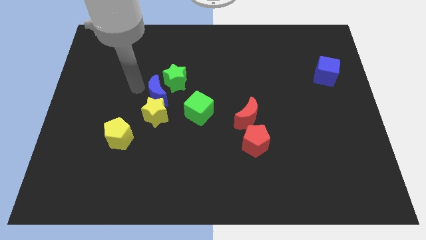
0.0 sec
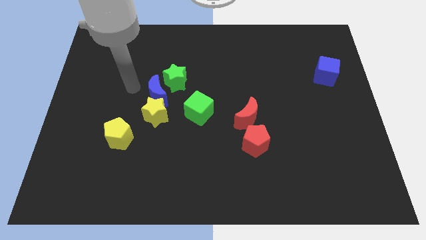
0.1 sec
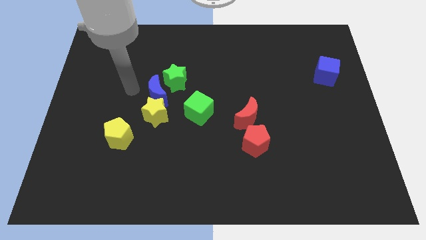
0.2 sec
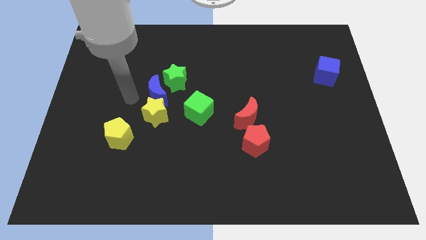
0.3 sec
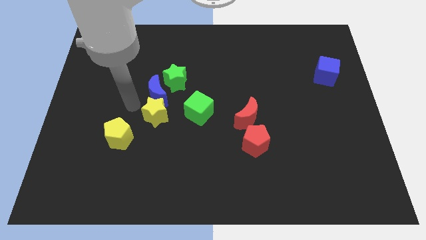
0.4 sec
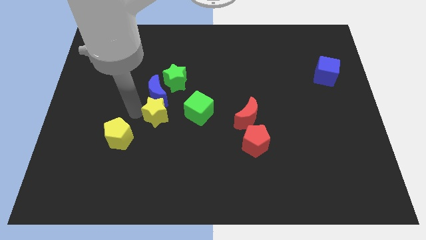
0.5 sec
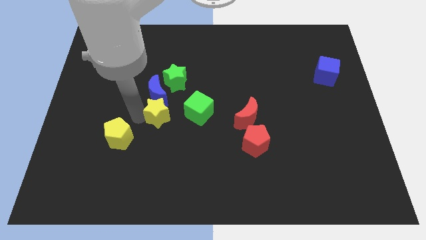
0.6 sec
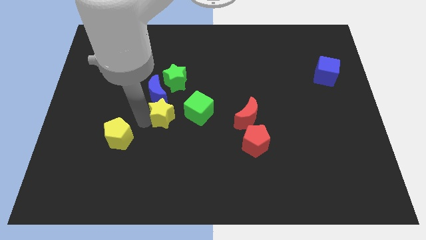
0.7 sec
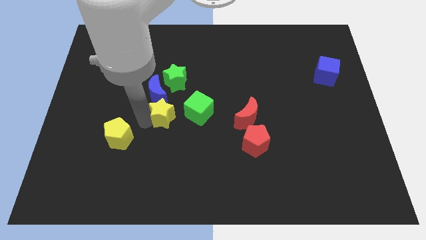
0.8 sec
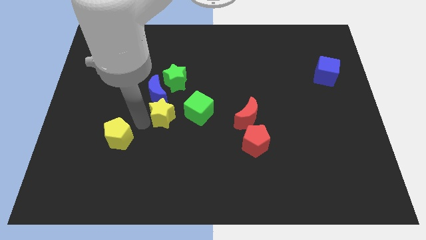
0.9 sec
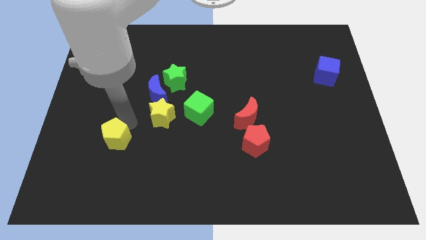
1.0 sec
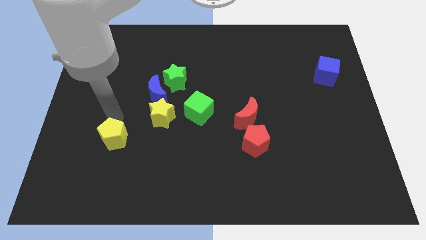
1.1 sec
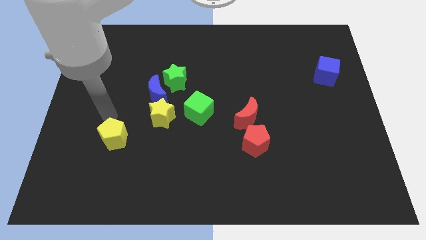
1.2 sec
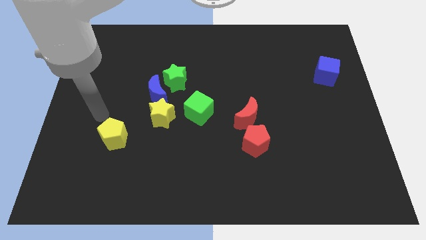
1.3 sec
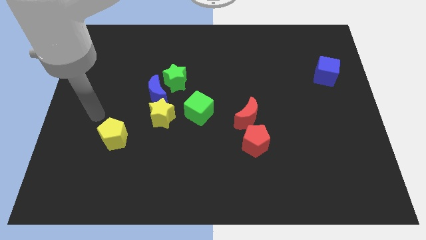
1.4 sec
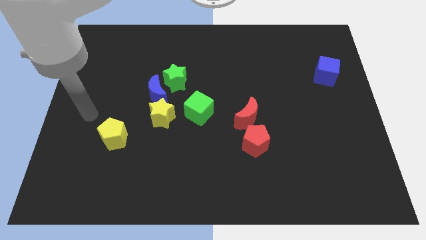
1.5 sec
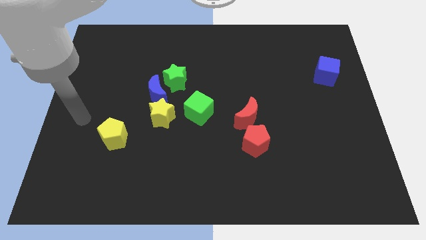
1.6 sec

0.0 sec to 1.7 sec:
push the yellow star towards the center of the board

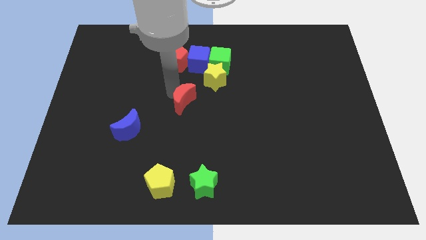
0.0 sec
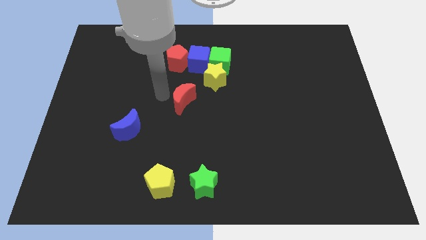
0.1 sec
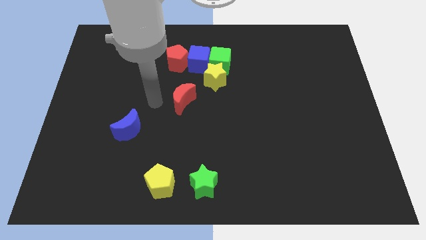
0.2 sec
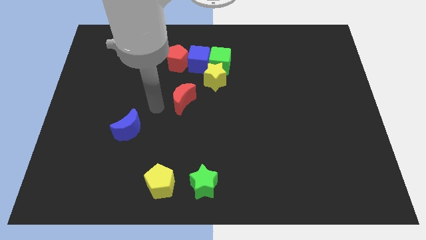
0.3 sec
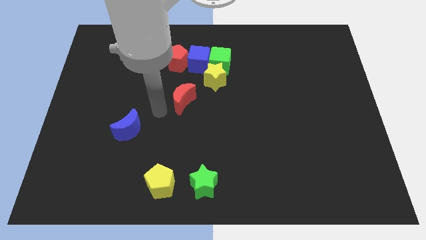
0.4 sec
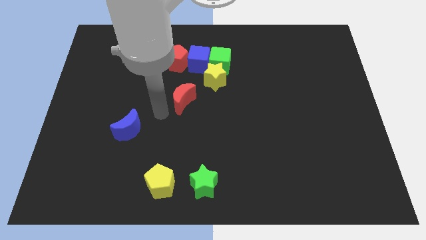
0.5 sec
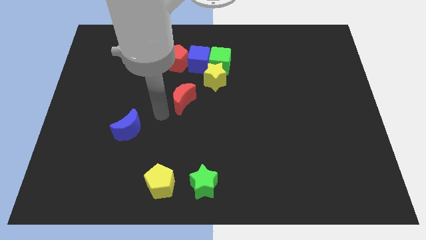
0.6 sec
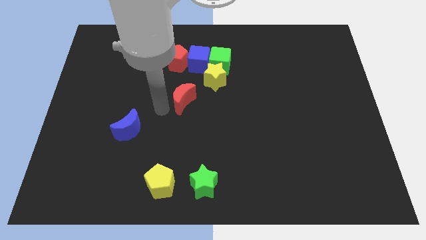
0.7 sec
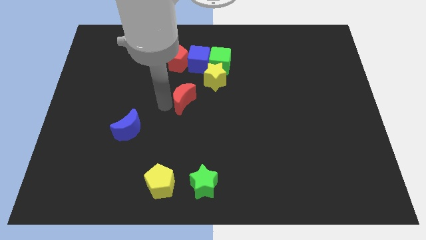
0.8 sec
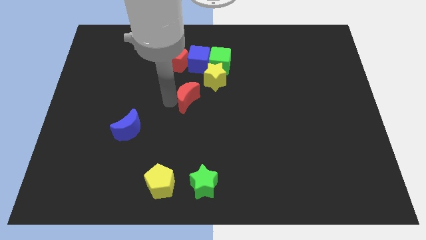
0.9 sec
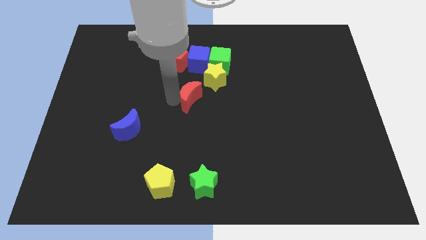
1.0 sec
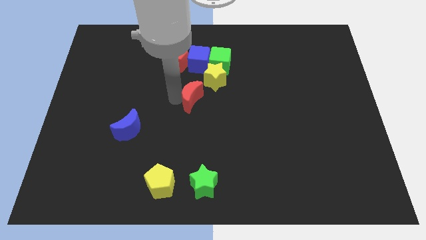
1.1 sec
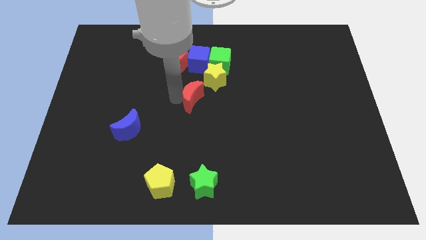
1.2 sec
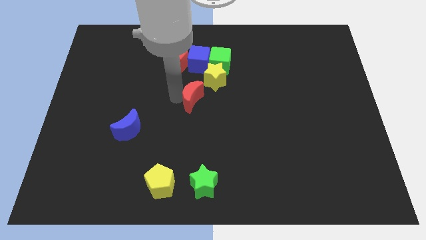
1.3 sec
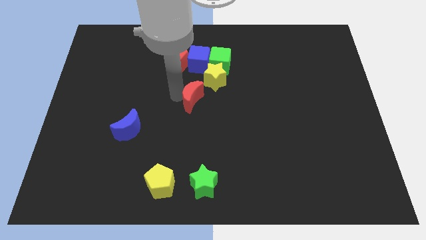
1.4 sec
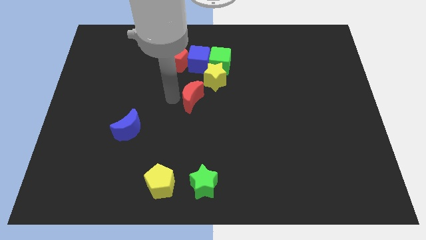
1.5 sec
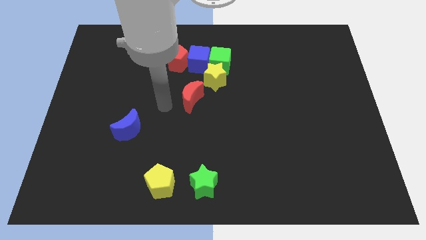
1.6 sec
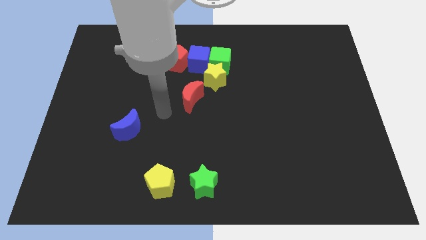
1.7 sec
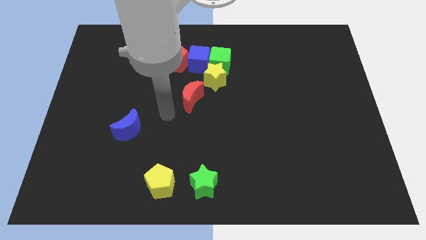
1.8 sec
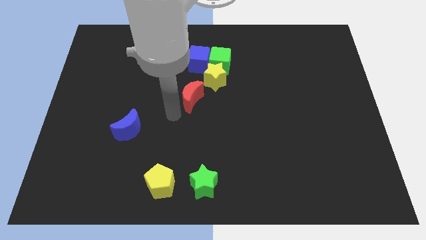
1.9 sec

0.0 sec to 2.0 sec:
push the red moon close to the yellow star

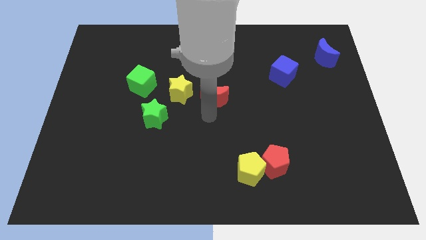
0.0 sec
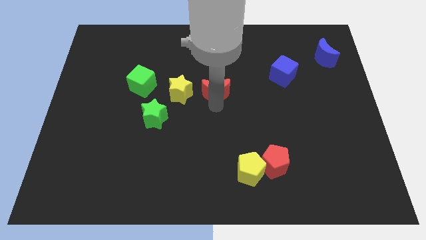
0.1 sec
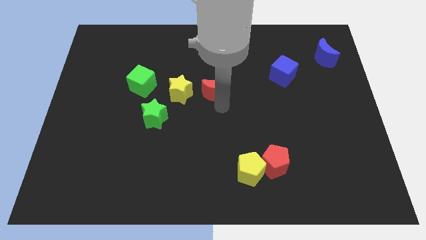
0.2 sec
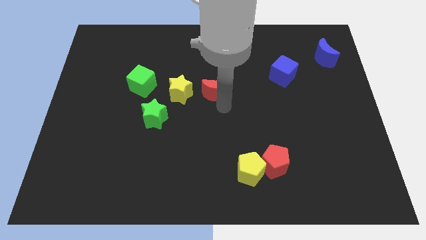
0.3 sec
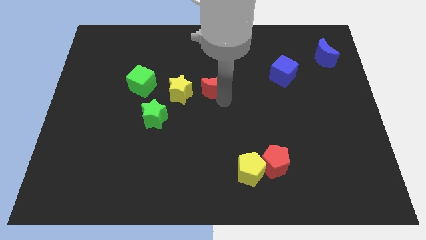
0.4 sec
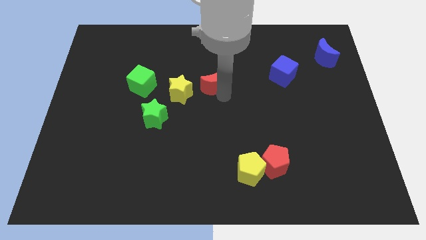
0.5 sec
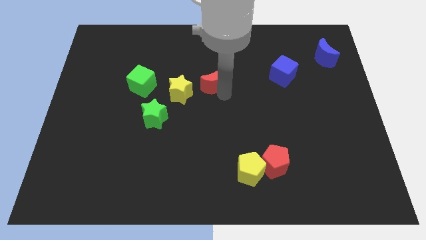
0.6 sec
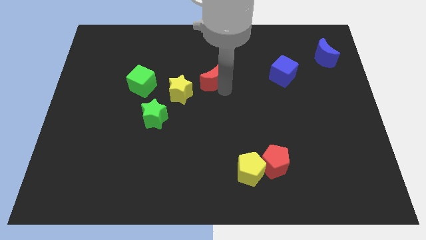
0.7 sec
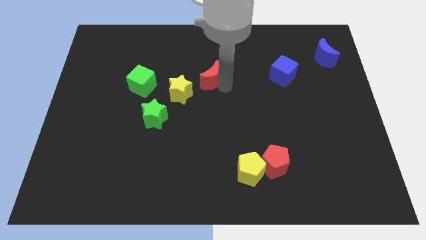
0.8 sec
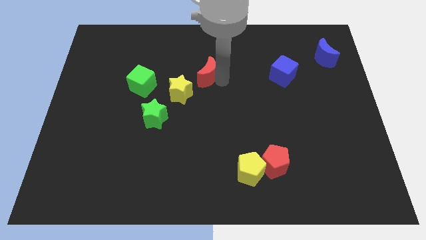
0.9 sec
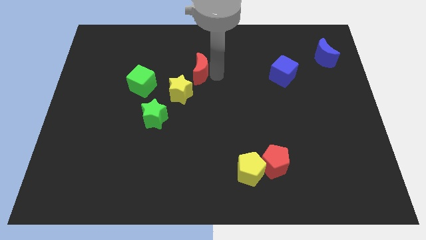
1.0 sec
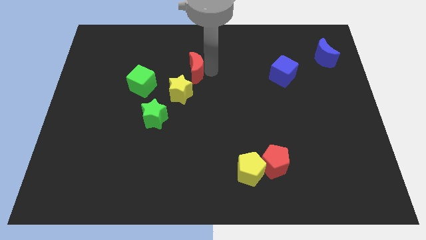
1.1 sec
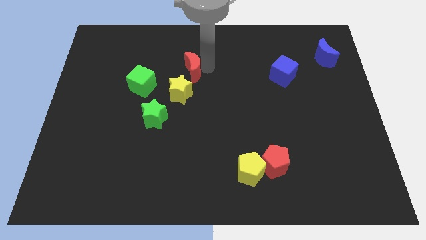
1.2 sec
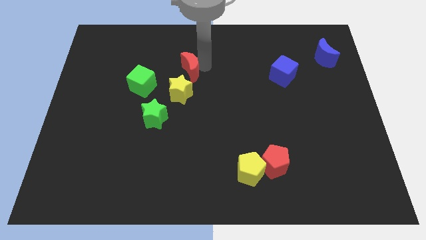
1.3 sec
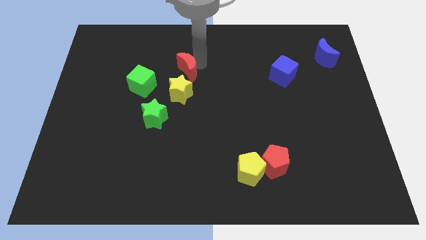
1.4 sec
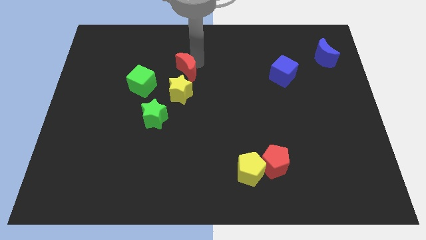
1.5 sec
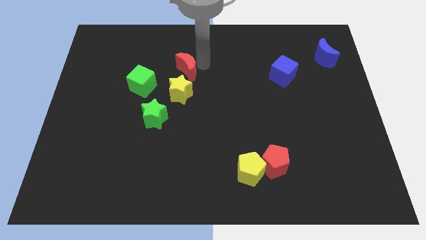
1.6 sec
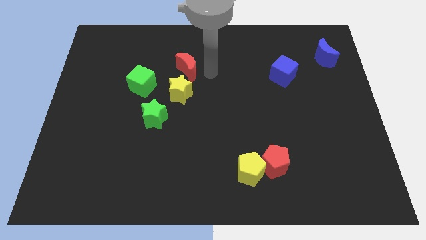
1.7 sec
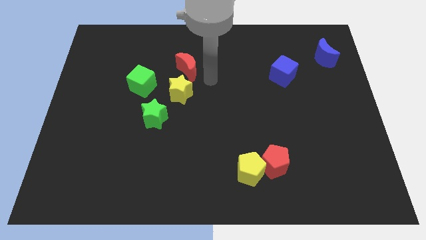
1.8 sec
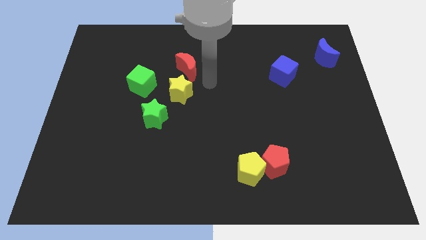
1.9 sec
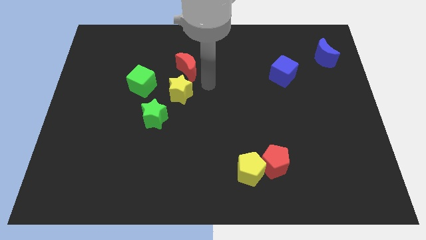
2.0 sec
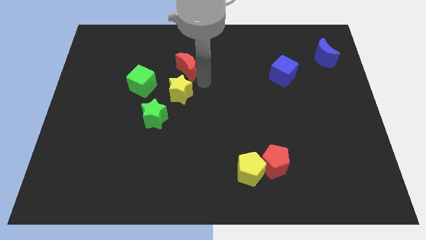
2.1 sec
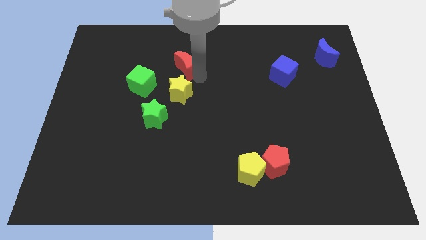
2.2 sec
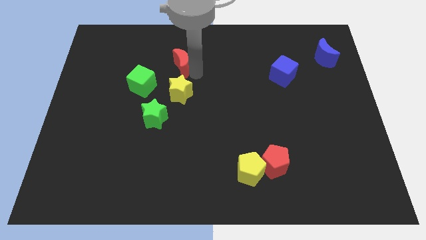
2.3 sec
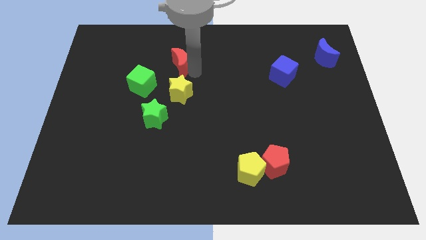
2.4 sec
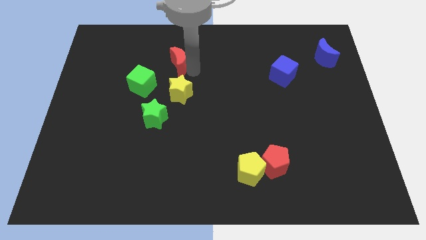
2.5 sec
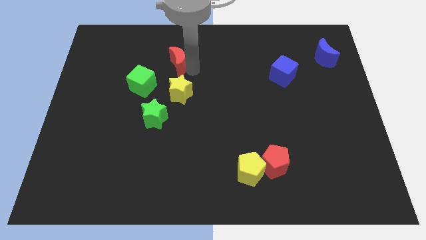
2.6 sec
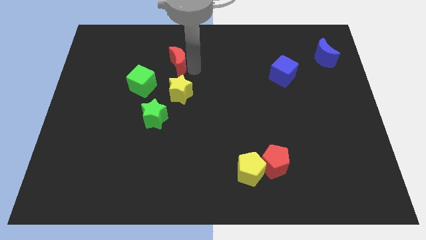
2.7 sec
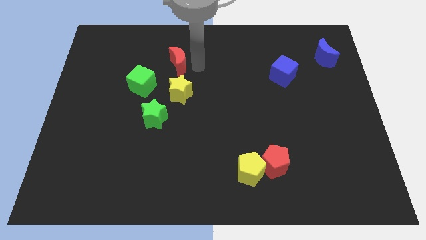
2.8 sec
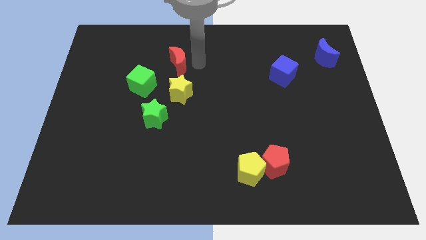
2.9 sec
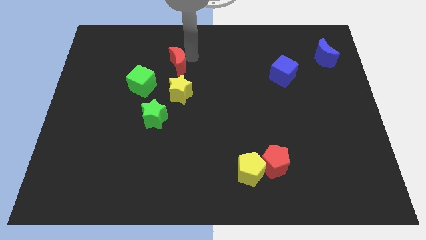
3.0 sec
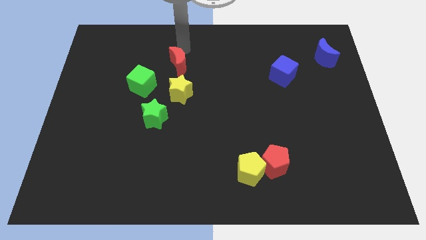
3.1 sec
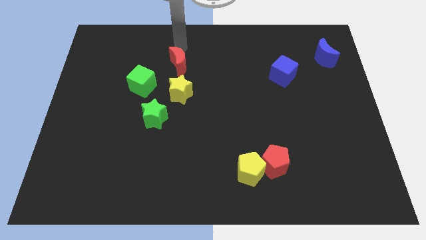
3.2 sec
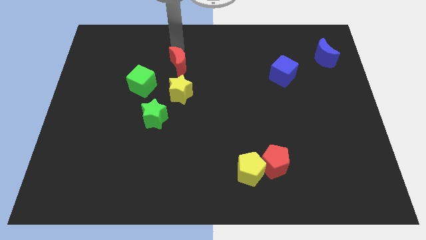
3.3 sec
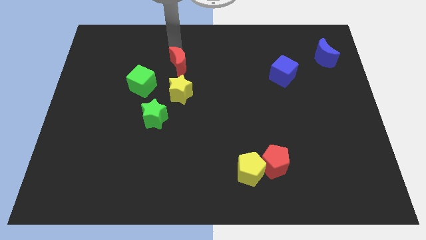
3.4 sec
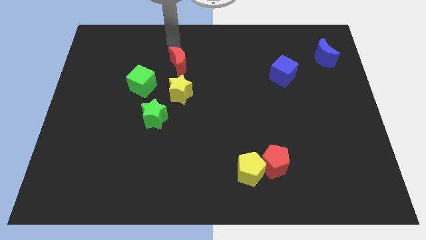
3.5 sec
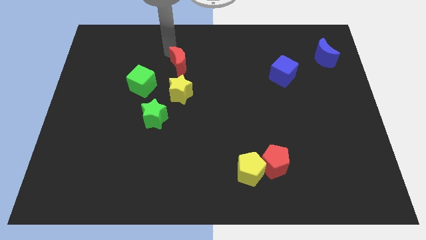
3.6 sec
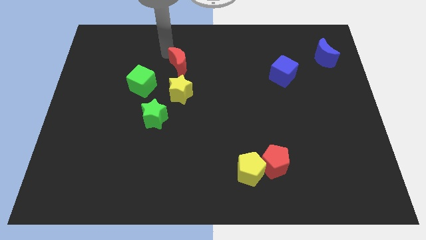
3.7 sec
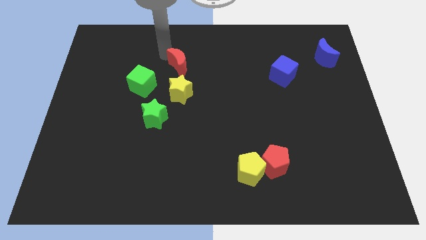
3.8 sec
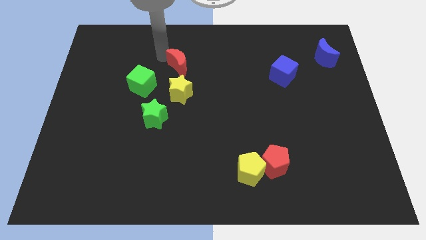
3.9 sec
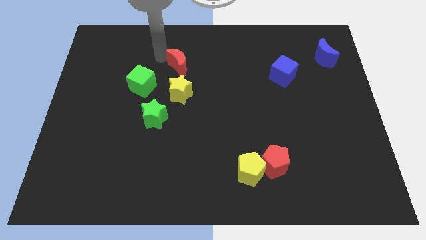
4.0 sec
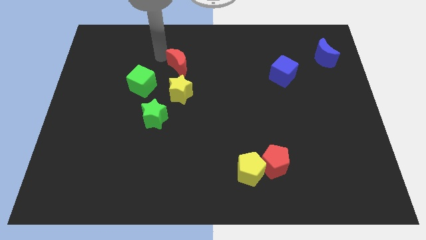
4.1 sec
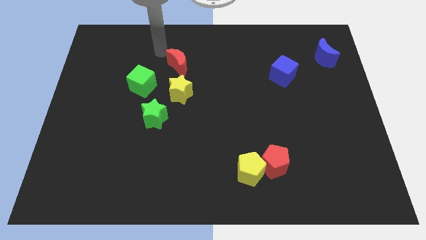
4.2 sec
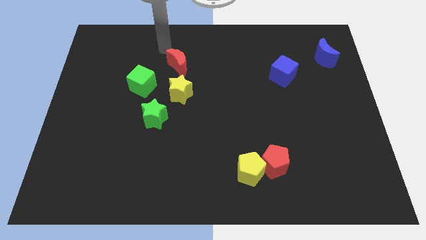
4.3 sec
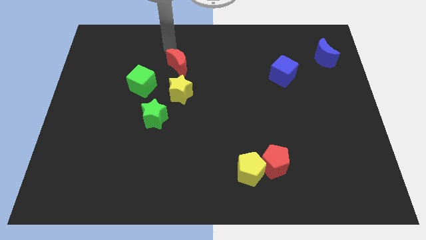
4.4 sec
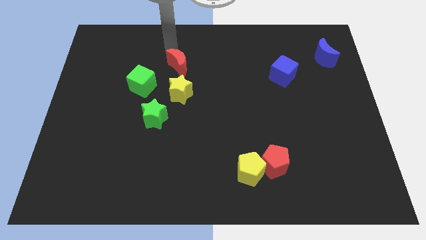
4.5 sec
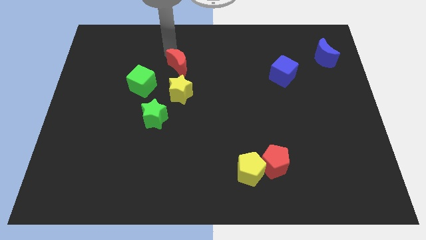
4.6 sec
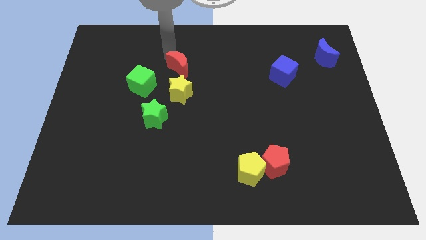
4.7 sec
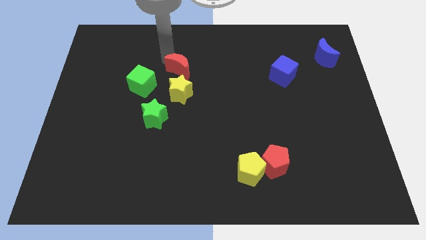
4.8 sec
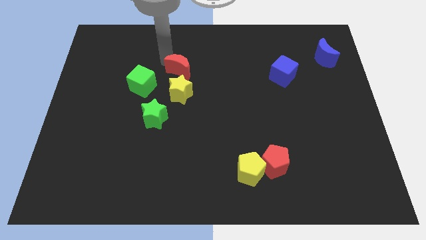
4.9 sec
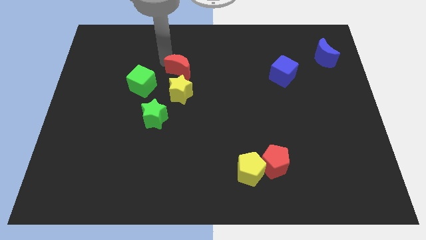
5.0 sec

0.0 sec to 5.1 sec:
push red moon towards yellow star

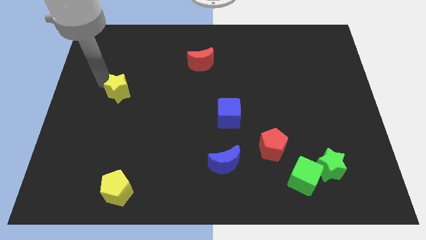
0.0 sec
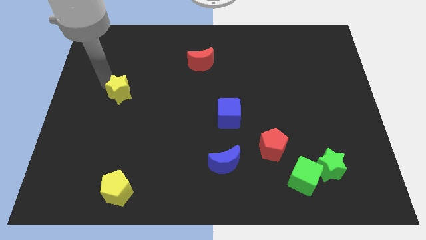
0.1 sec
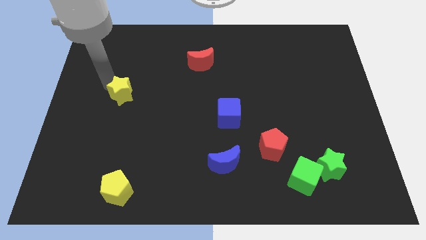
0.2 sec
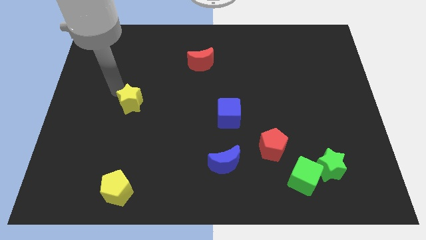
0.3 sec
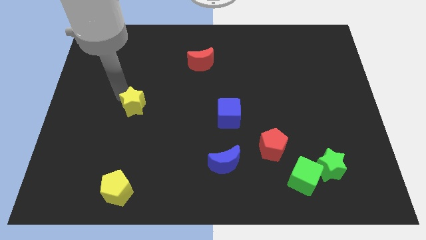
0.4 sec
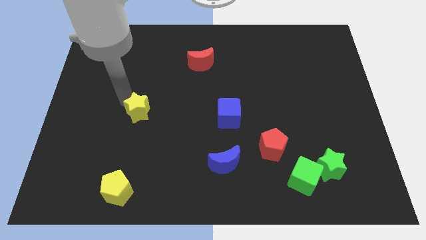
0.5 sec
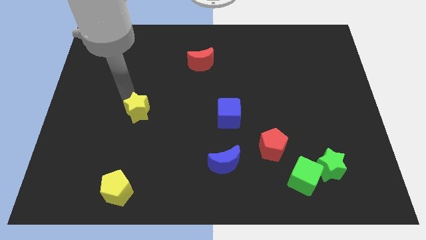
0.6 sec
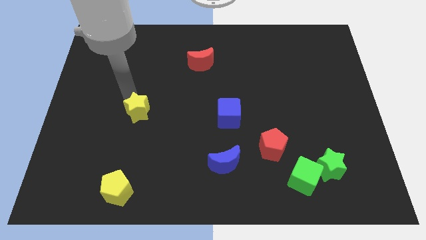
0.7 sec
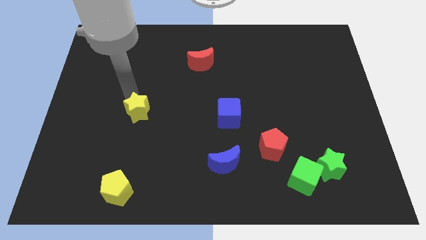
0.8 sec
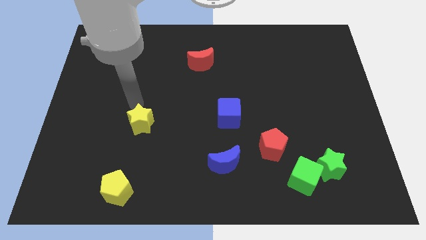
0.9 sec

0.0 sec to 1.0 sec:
place the yellow star left to the blue cube
